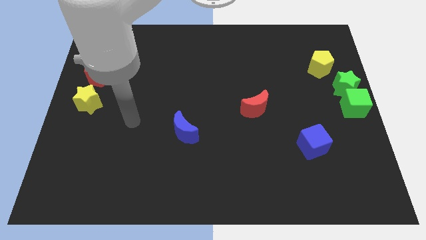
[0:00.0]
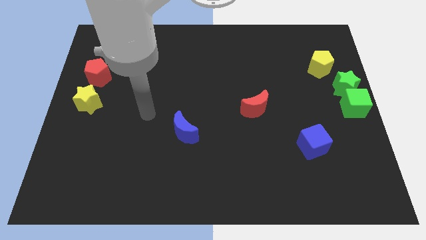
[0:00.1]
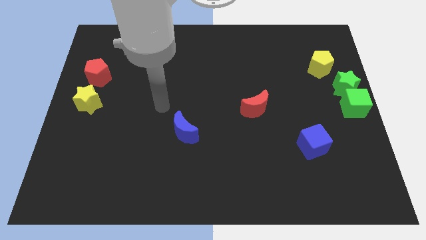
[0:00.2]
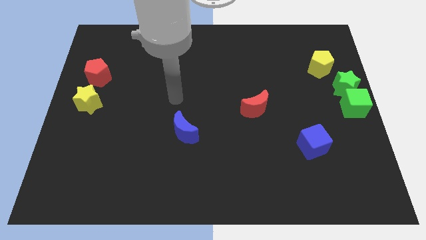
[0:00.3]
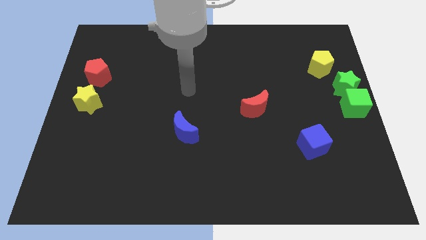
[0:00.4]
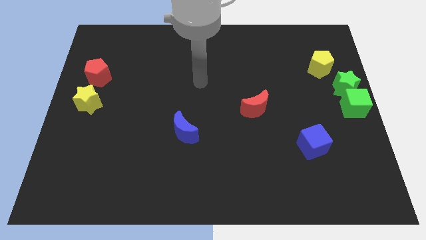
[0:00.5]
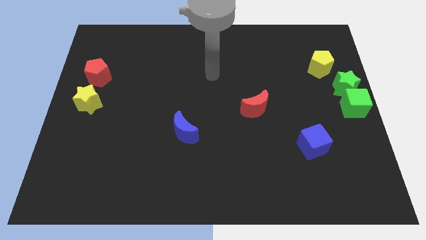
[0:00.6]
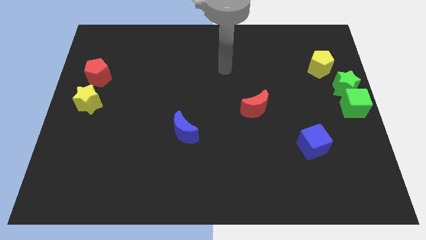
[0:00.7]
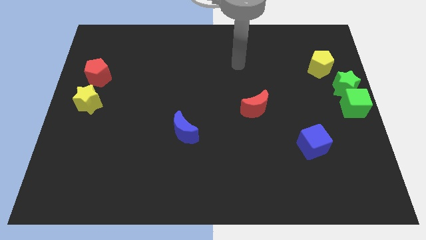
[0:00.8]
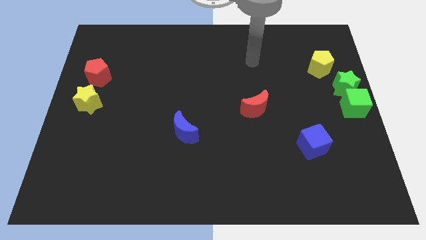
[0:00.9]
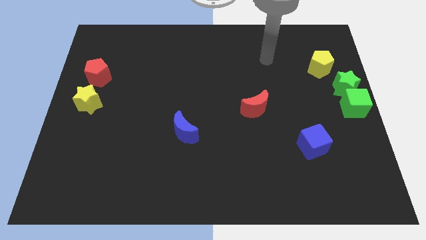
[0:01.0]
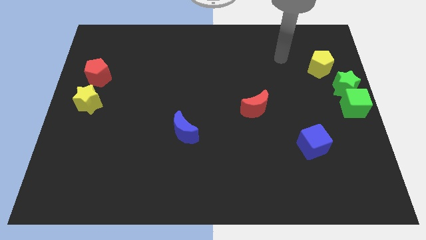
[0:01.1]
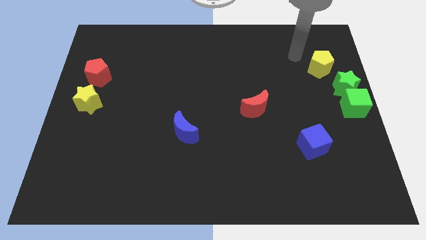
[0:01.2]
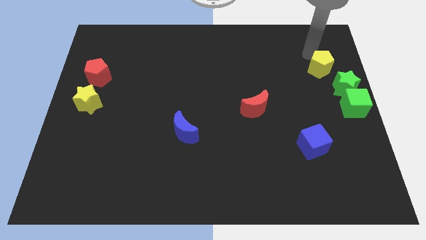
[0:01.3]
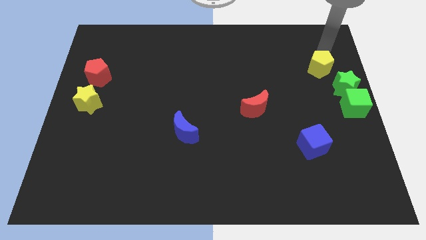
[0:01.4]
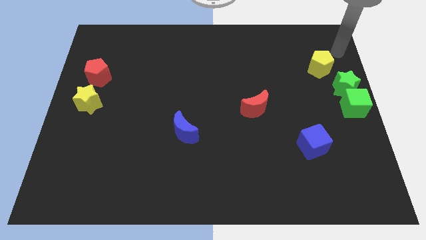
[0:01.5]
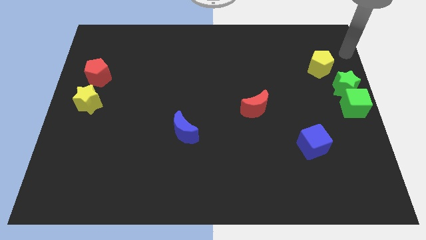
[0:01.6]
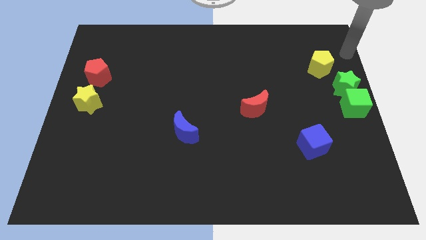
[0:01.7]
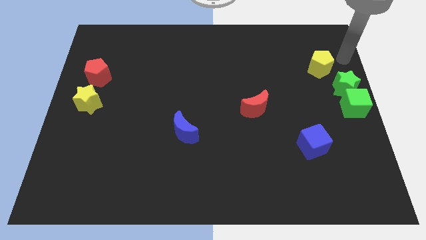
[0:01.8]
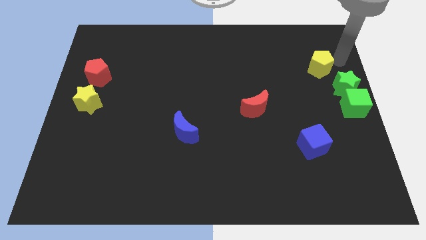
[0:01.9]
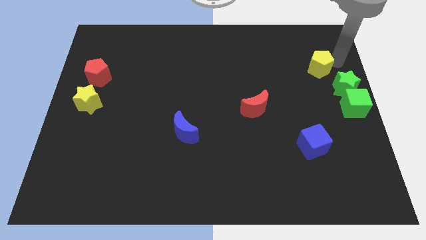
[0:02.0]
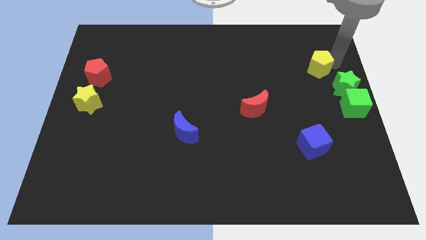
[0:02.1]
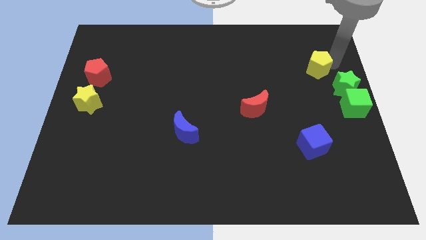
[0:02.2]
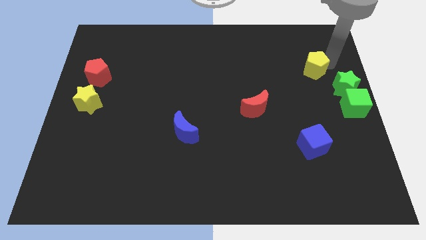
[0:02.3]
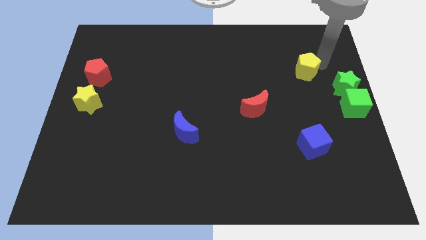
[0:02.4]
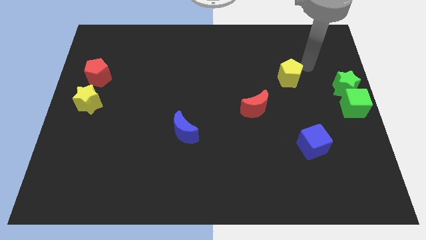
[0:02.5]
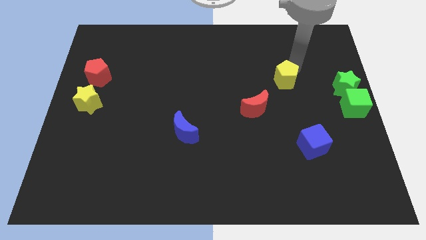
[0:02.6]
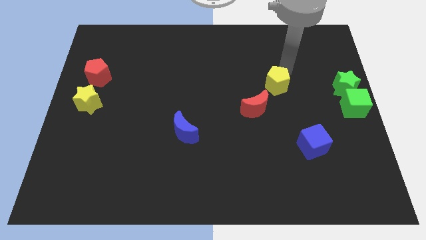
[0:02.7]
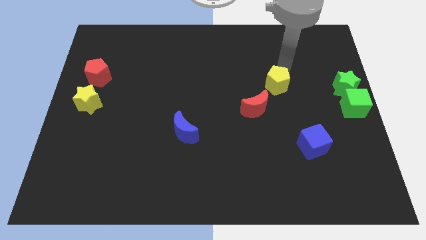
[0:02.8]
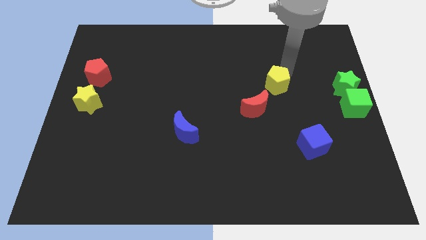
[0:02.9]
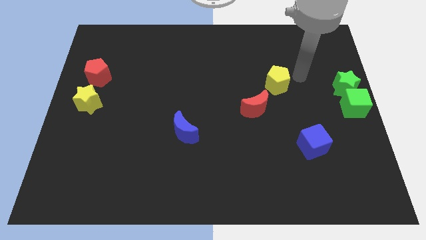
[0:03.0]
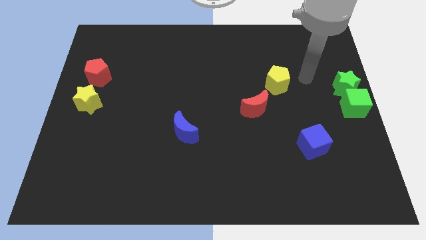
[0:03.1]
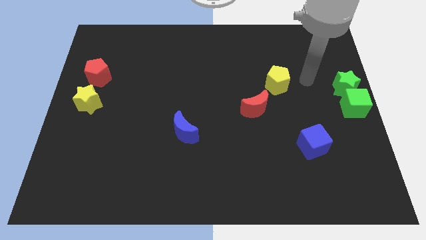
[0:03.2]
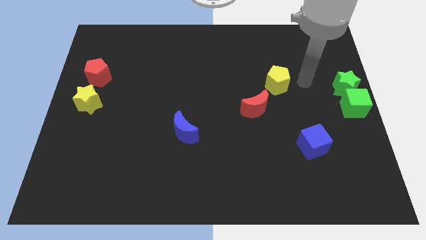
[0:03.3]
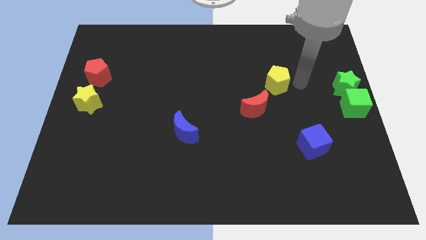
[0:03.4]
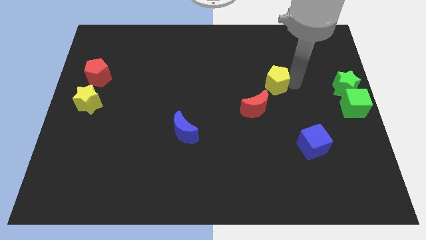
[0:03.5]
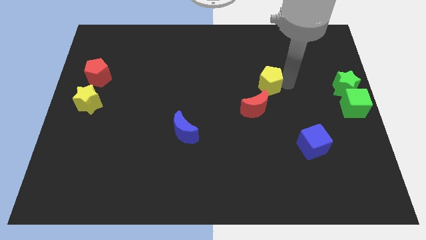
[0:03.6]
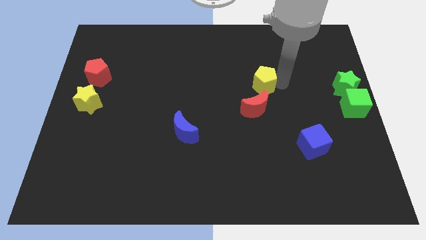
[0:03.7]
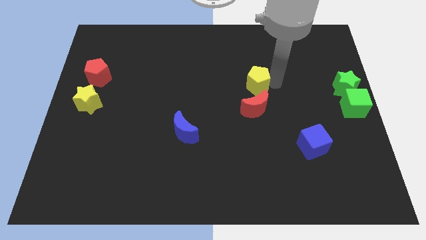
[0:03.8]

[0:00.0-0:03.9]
move the yellow pentagon above the red crescent

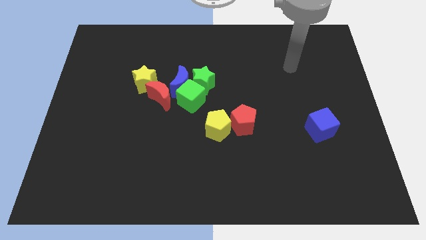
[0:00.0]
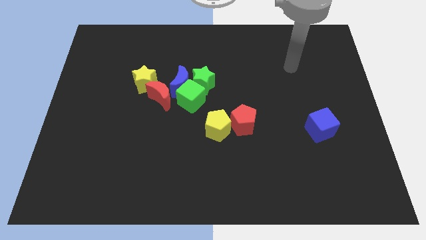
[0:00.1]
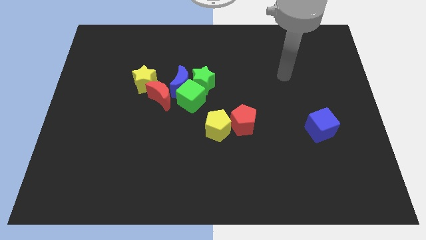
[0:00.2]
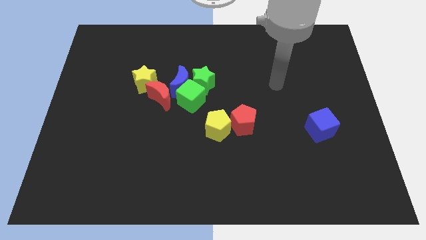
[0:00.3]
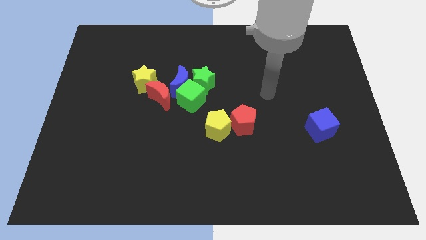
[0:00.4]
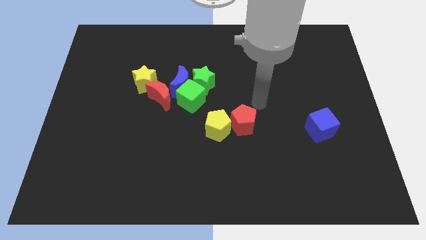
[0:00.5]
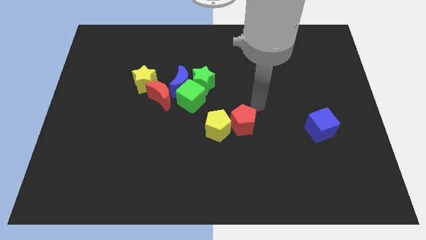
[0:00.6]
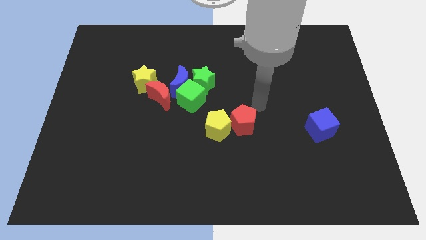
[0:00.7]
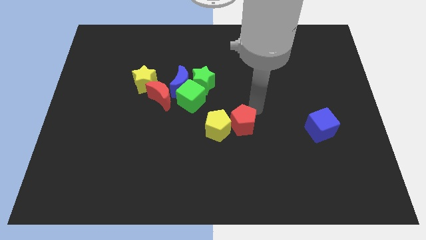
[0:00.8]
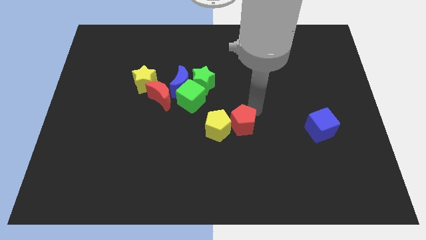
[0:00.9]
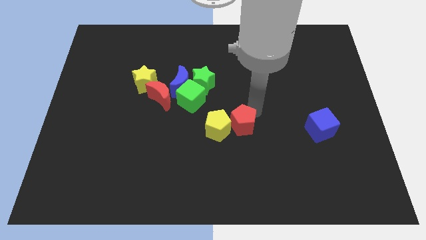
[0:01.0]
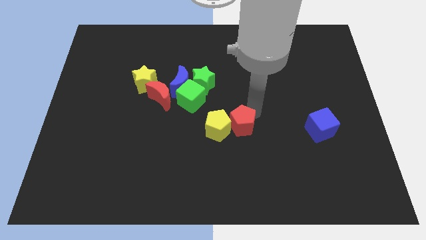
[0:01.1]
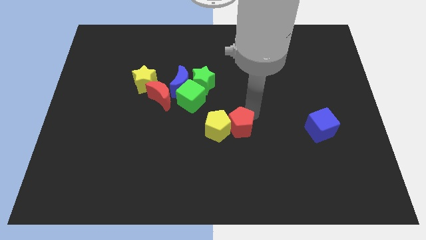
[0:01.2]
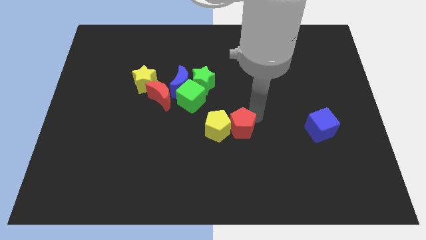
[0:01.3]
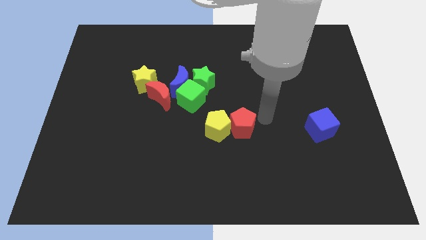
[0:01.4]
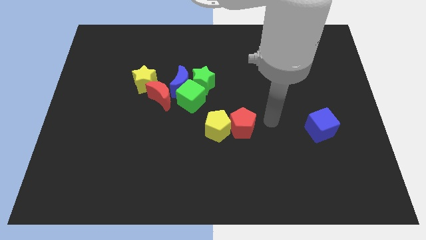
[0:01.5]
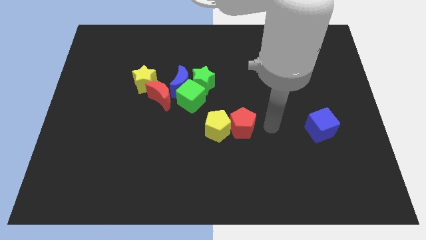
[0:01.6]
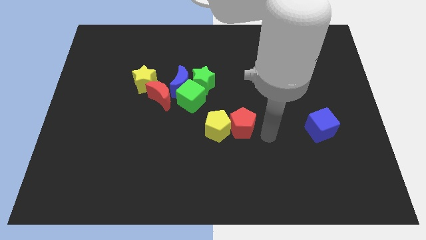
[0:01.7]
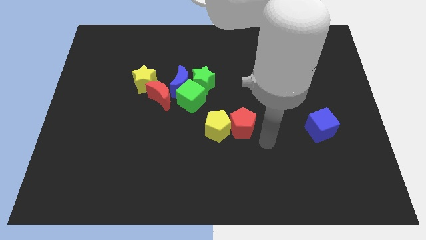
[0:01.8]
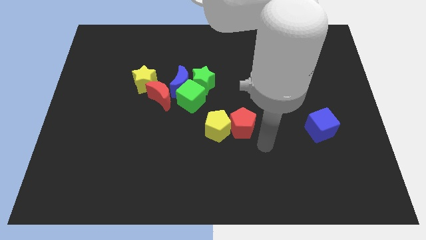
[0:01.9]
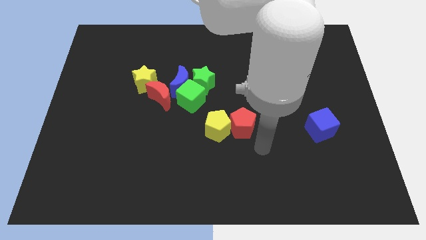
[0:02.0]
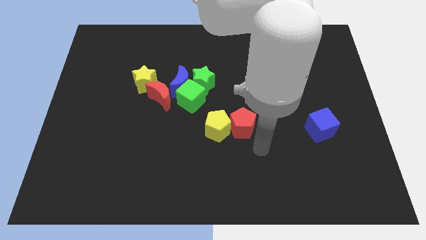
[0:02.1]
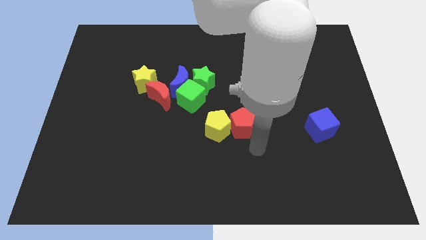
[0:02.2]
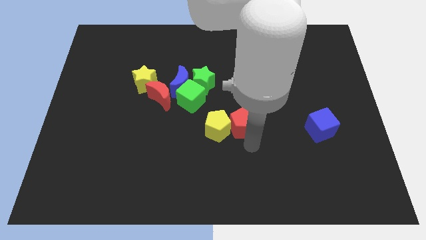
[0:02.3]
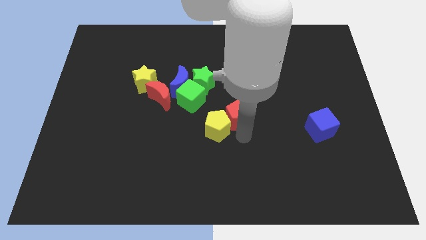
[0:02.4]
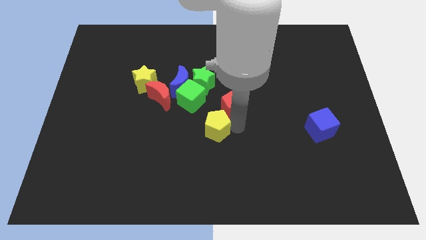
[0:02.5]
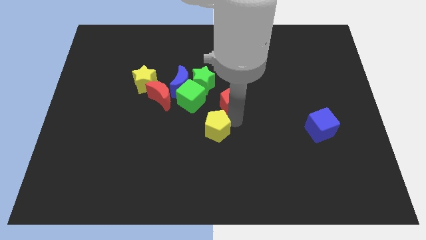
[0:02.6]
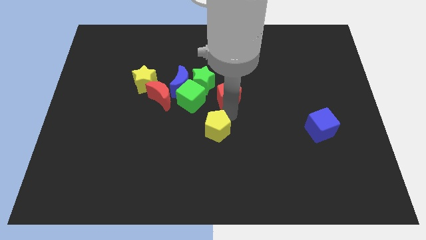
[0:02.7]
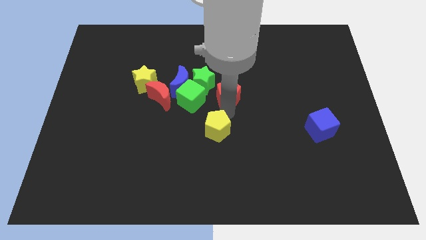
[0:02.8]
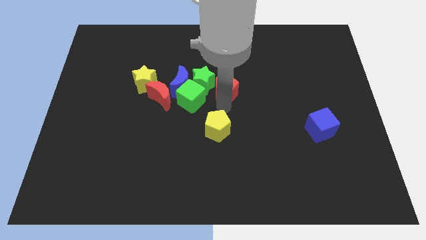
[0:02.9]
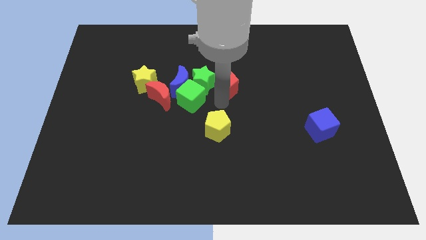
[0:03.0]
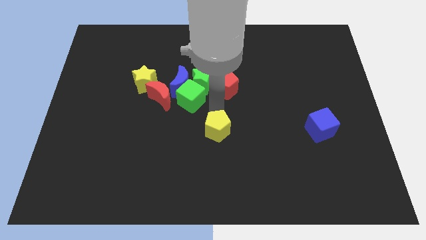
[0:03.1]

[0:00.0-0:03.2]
place red pentagon to the center

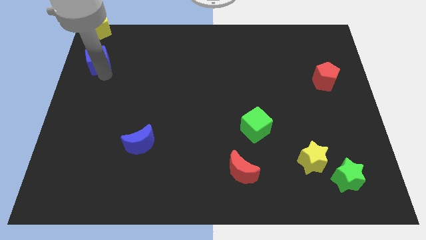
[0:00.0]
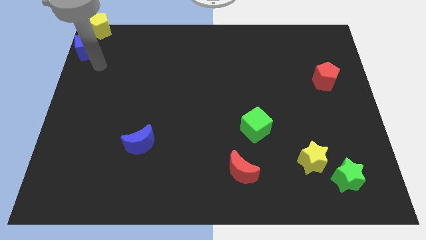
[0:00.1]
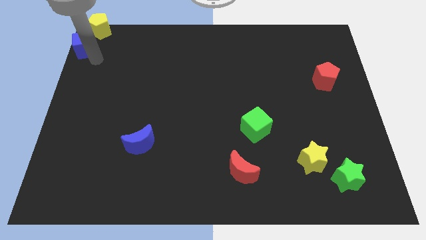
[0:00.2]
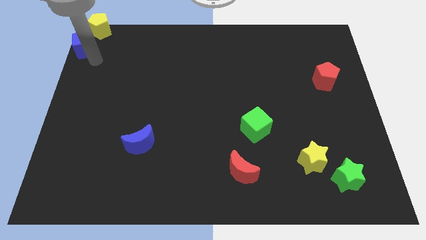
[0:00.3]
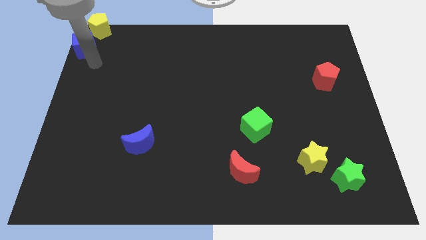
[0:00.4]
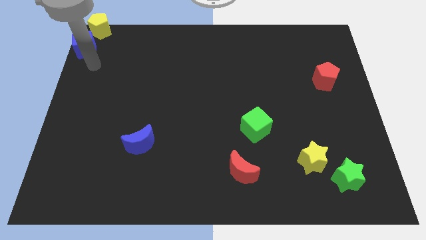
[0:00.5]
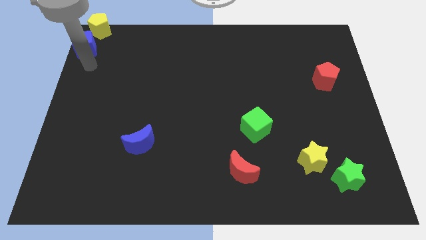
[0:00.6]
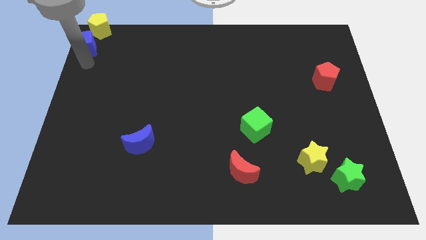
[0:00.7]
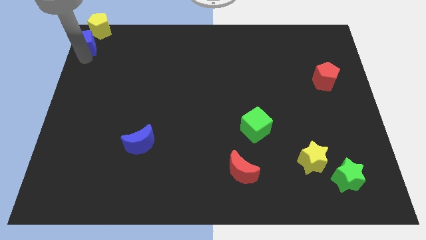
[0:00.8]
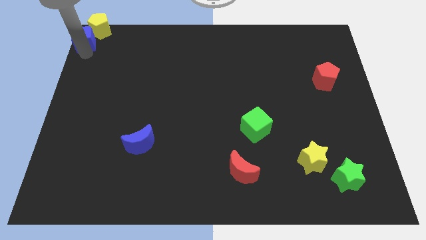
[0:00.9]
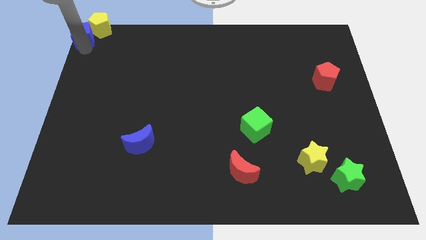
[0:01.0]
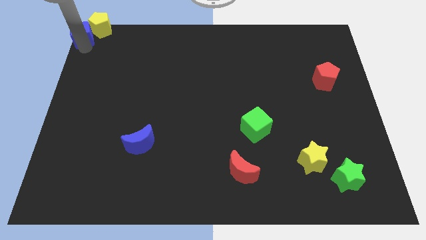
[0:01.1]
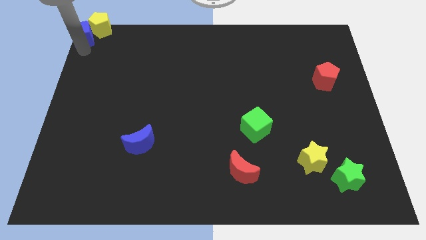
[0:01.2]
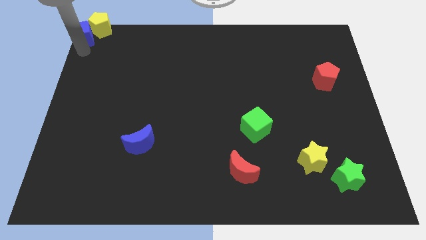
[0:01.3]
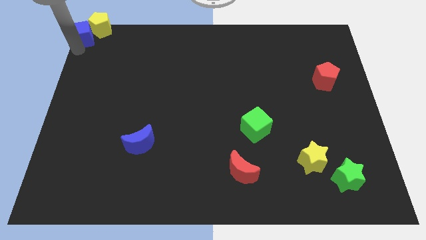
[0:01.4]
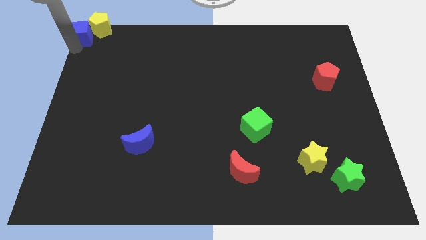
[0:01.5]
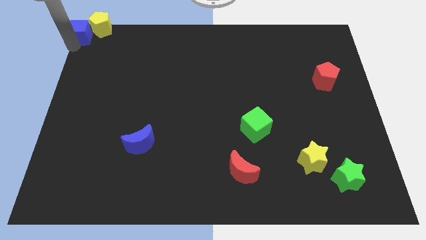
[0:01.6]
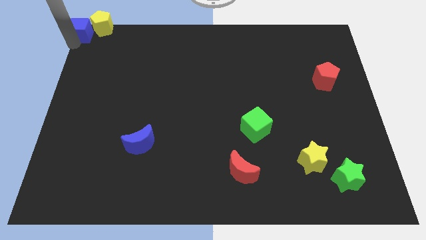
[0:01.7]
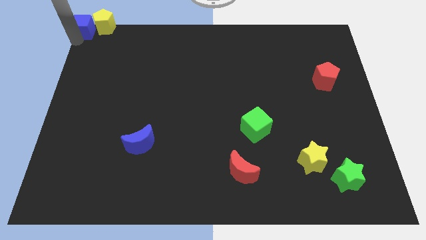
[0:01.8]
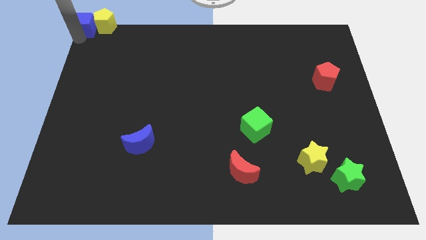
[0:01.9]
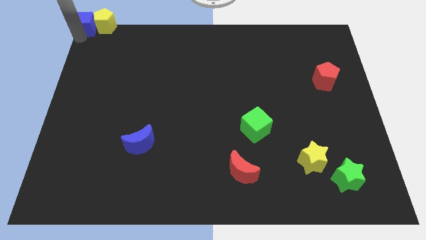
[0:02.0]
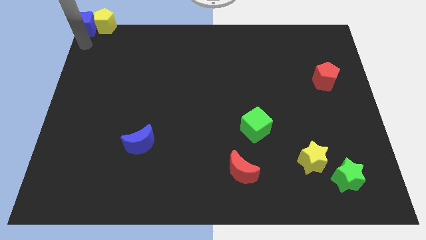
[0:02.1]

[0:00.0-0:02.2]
move the blue cube into the left side of the yellow pentagon
